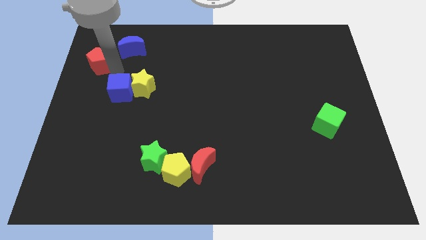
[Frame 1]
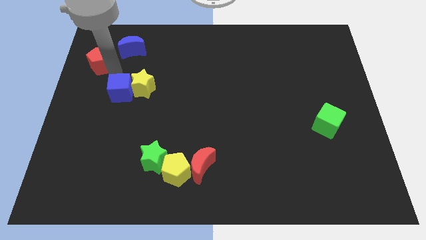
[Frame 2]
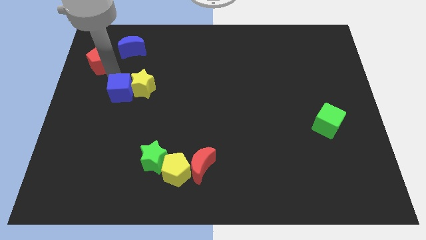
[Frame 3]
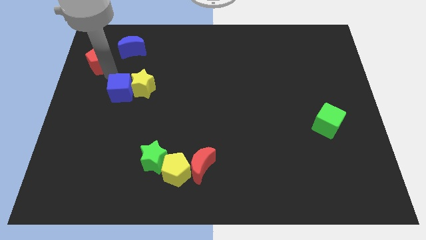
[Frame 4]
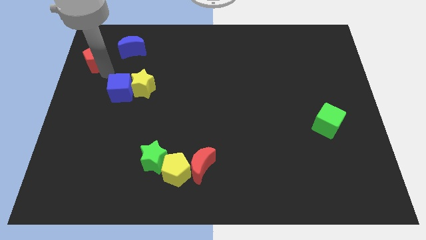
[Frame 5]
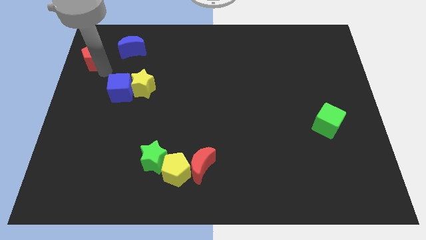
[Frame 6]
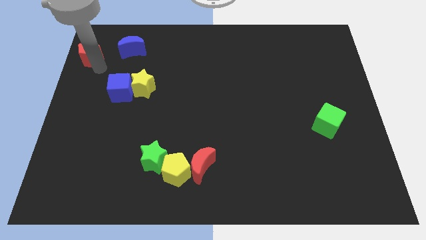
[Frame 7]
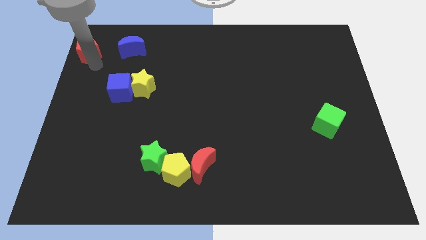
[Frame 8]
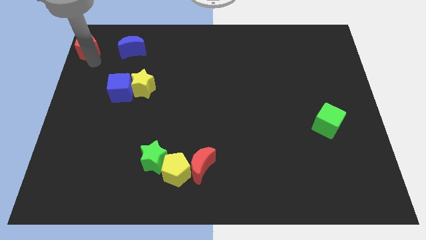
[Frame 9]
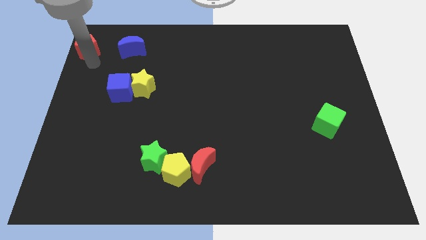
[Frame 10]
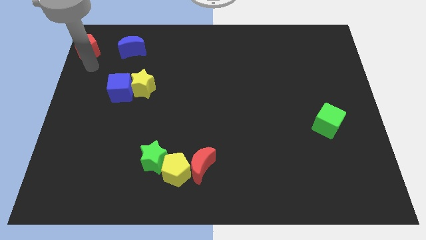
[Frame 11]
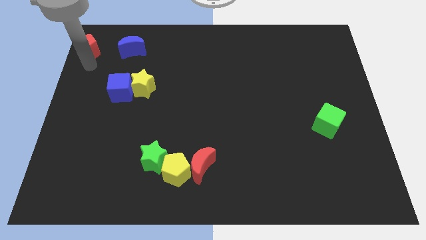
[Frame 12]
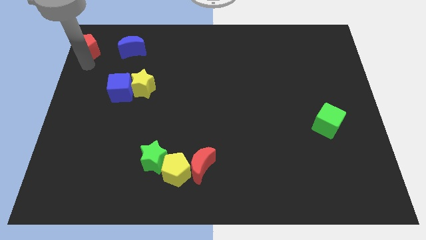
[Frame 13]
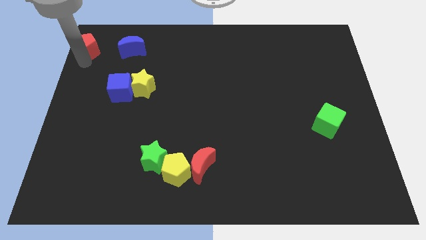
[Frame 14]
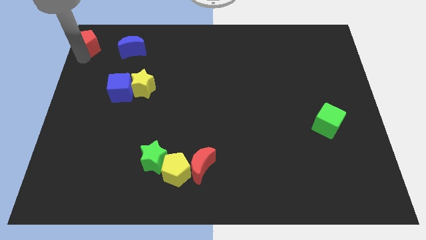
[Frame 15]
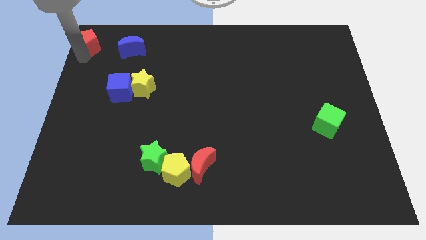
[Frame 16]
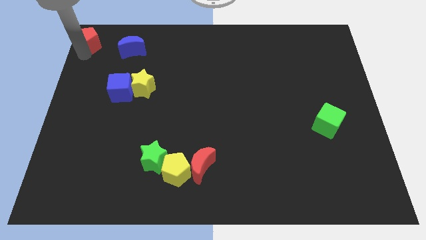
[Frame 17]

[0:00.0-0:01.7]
place red pentagon to the top left of the board

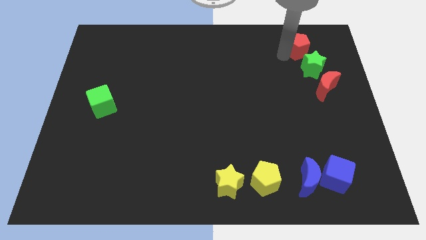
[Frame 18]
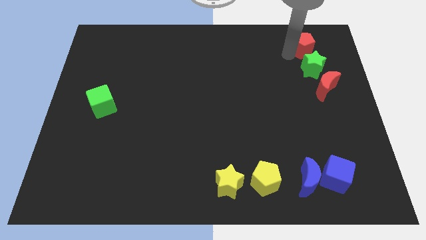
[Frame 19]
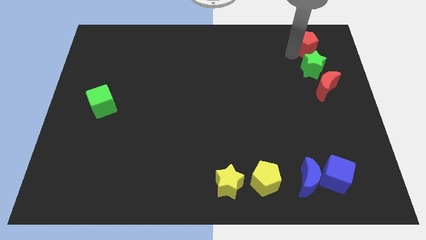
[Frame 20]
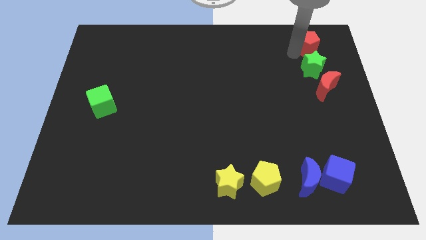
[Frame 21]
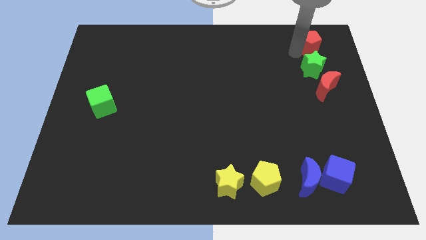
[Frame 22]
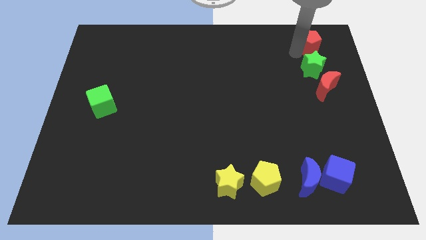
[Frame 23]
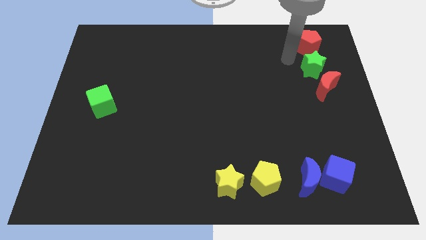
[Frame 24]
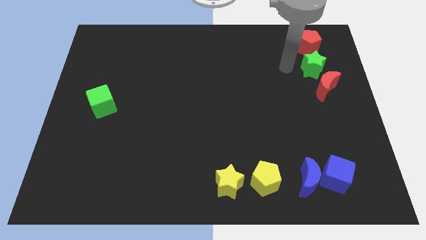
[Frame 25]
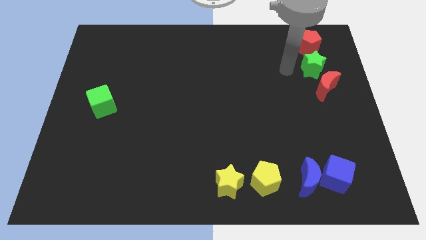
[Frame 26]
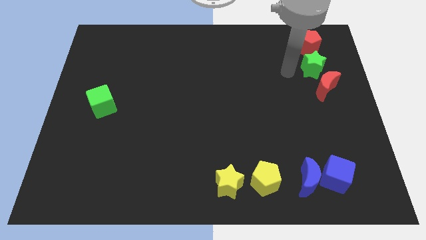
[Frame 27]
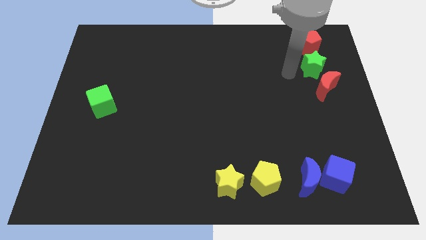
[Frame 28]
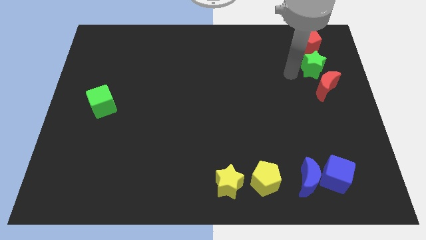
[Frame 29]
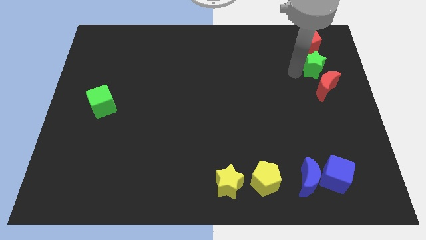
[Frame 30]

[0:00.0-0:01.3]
move red pentagon above green star

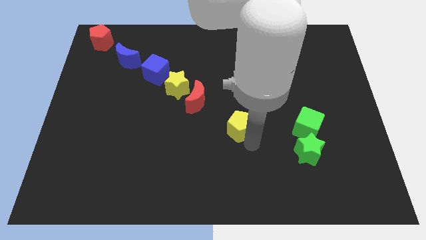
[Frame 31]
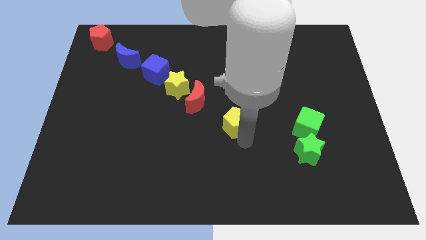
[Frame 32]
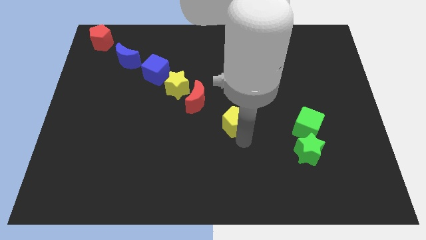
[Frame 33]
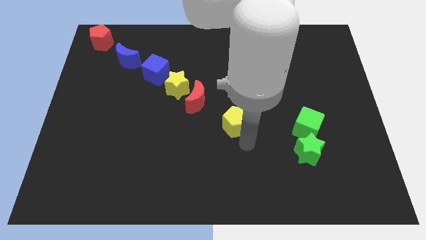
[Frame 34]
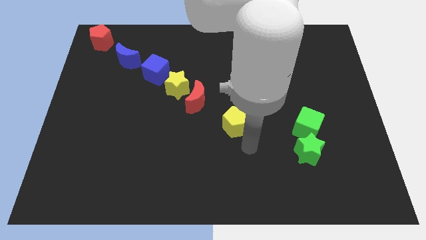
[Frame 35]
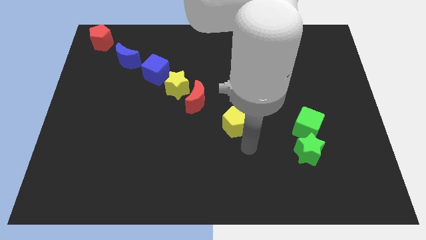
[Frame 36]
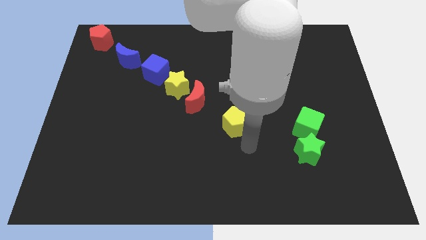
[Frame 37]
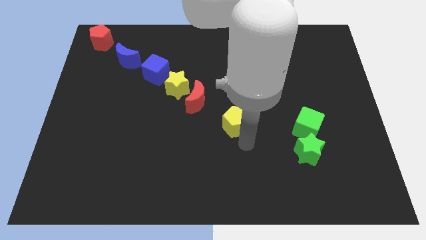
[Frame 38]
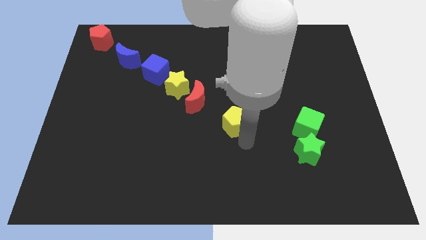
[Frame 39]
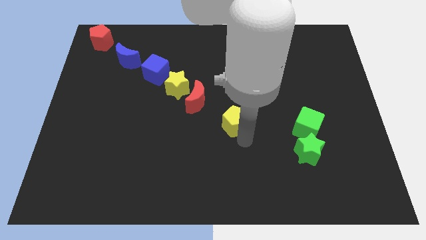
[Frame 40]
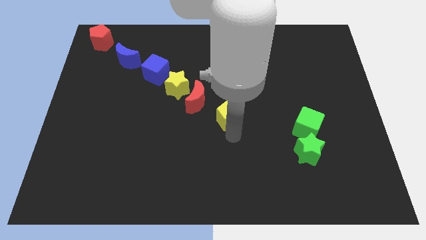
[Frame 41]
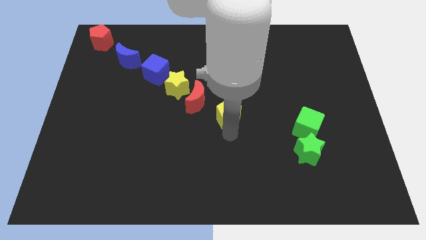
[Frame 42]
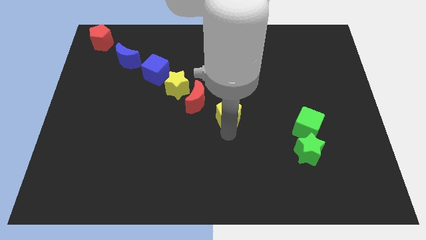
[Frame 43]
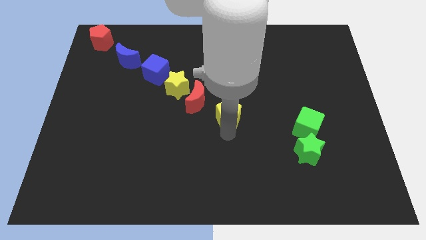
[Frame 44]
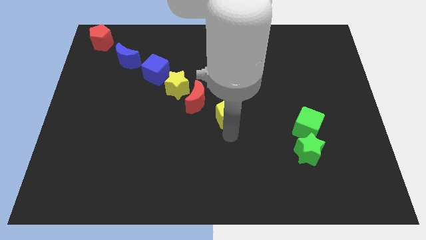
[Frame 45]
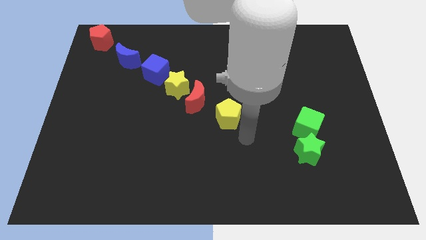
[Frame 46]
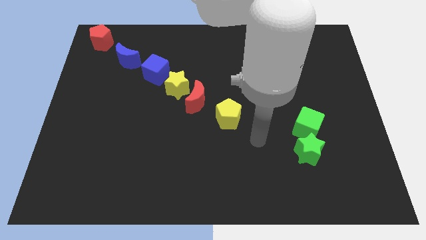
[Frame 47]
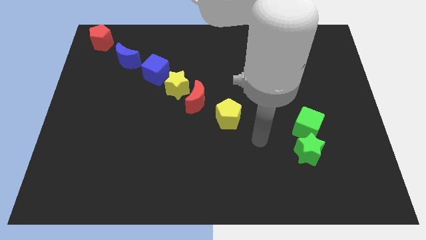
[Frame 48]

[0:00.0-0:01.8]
push the yellow pentagon towards the center of the board

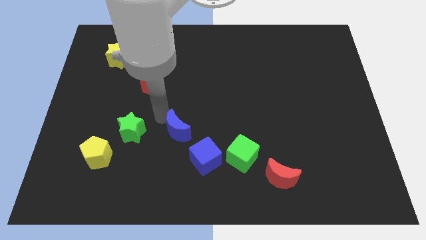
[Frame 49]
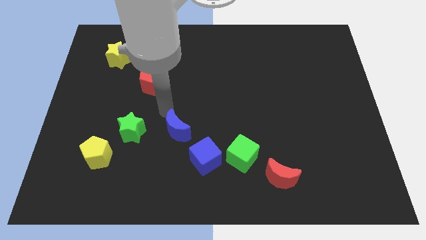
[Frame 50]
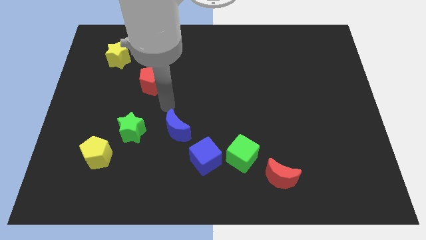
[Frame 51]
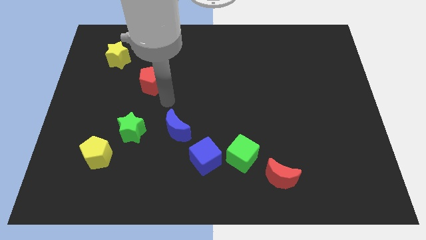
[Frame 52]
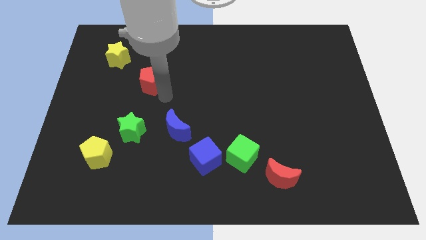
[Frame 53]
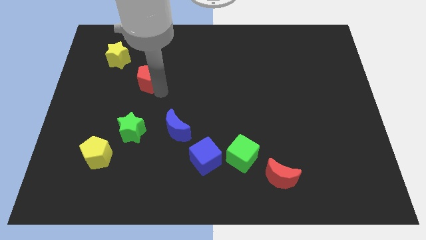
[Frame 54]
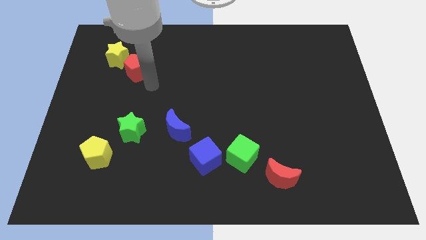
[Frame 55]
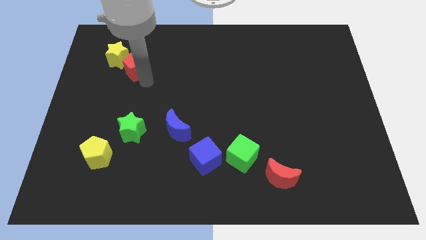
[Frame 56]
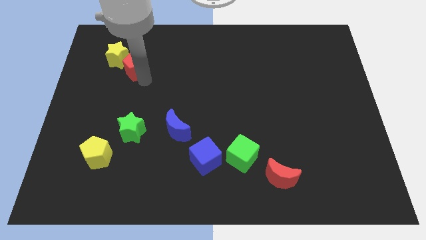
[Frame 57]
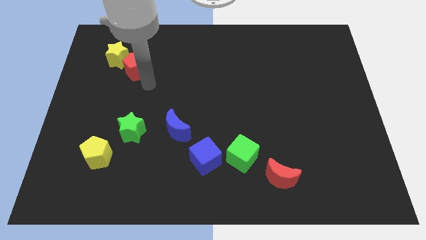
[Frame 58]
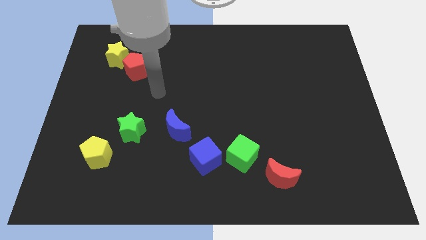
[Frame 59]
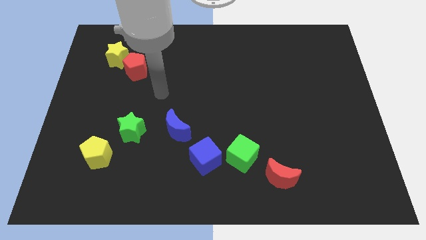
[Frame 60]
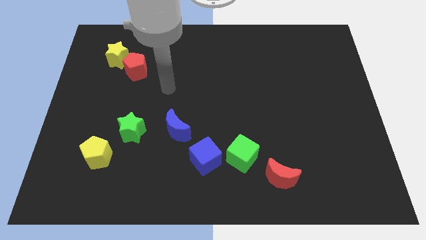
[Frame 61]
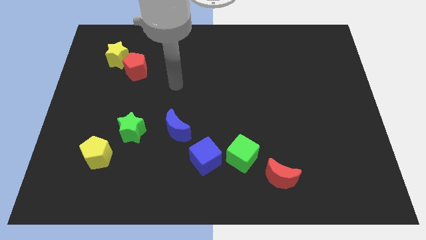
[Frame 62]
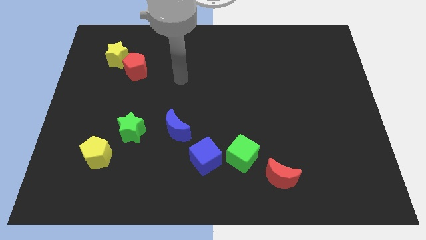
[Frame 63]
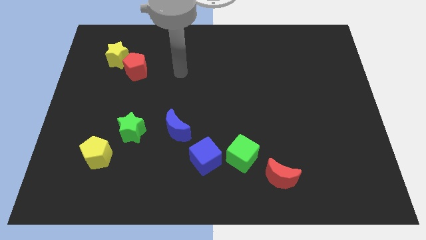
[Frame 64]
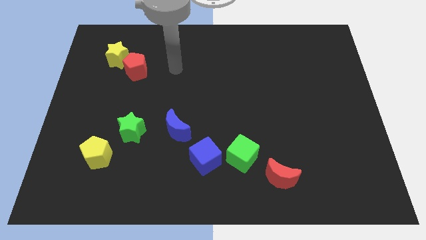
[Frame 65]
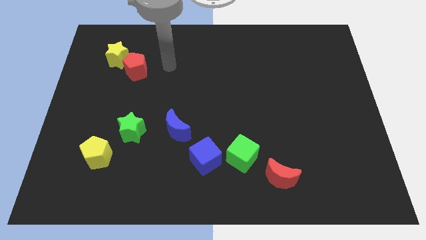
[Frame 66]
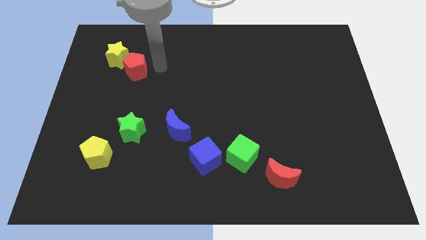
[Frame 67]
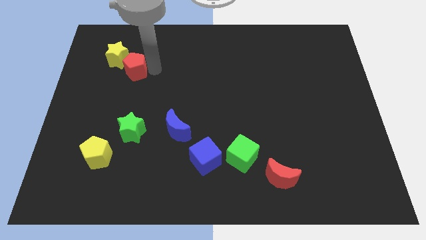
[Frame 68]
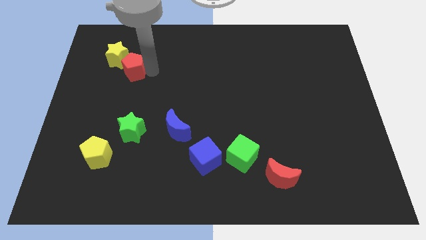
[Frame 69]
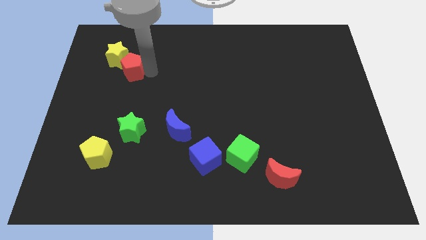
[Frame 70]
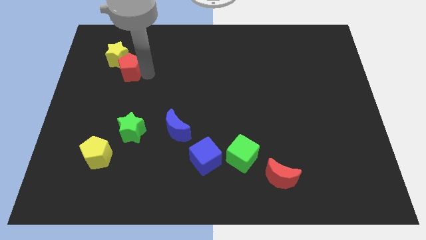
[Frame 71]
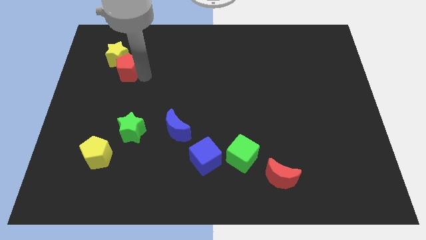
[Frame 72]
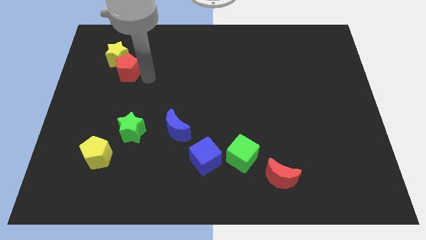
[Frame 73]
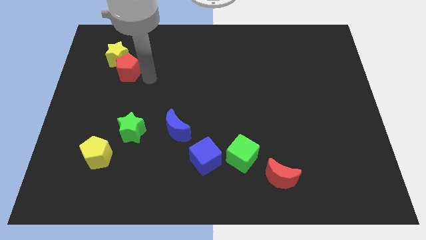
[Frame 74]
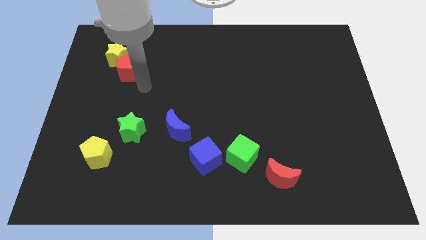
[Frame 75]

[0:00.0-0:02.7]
move the red pentagon close to the yellow star

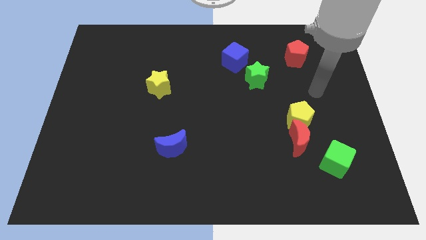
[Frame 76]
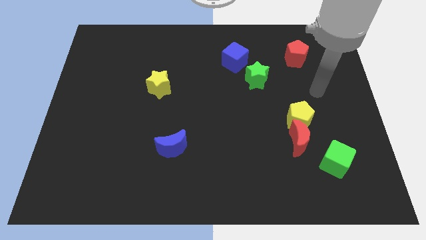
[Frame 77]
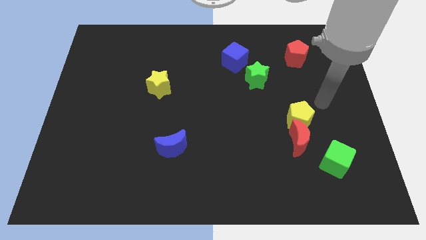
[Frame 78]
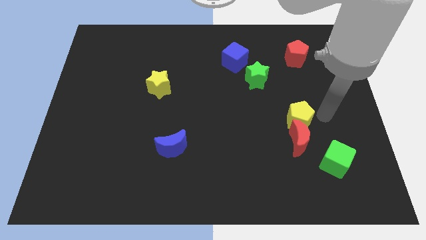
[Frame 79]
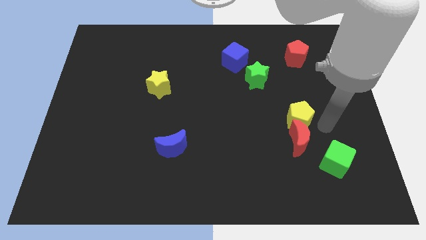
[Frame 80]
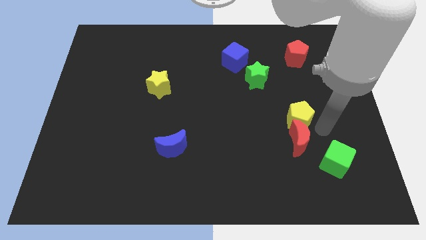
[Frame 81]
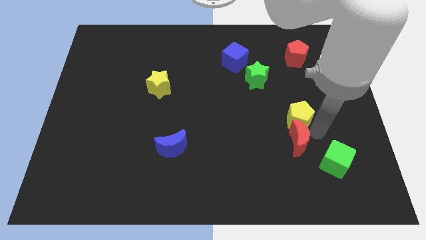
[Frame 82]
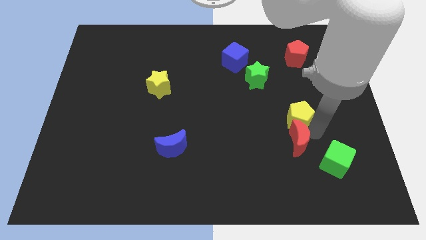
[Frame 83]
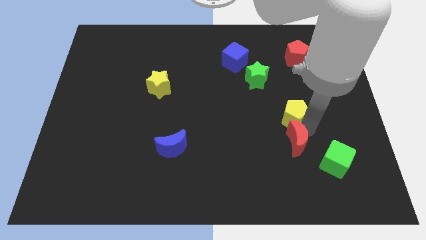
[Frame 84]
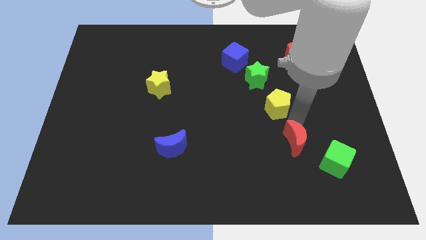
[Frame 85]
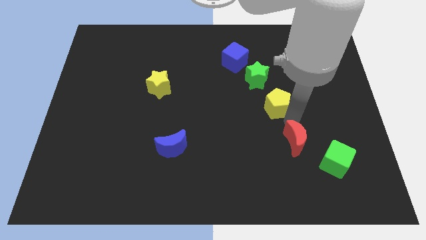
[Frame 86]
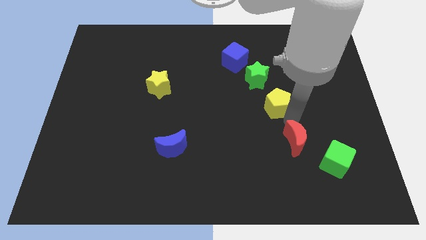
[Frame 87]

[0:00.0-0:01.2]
separate the yellow pentagon from the red crescent

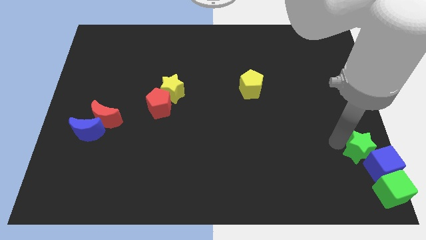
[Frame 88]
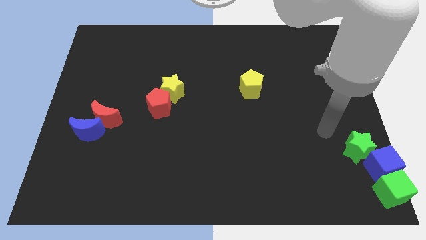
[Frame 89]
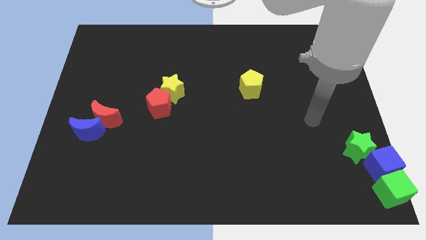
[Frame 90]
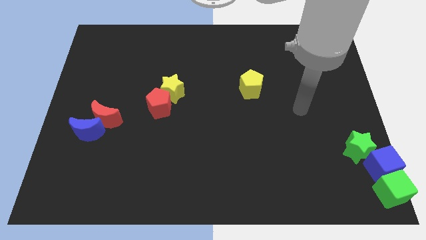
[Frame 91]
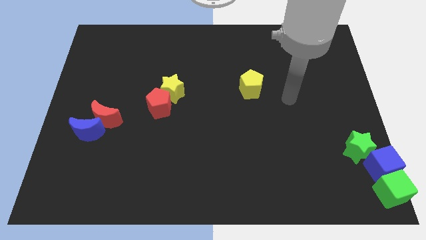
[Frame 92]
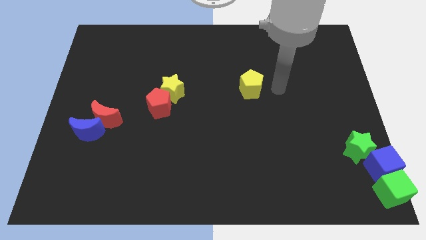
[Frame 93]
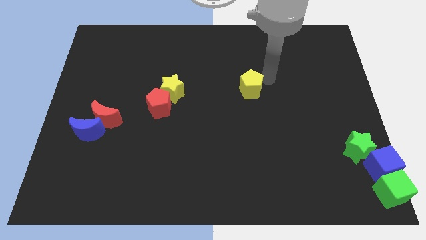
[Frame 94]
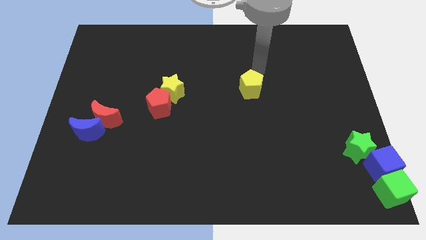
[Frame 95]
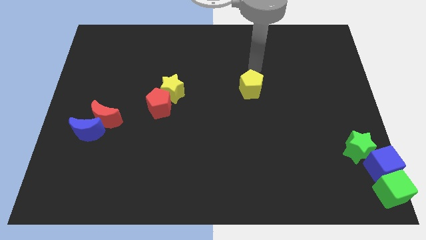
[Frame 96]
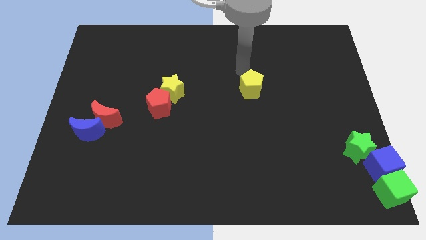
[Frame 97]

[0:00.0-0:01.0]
move arm to the top of yellow pentagon
